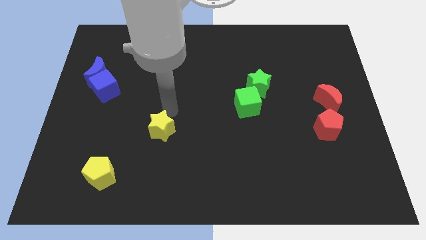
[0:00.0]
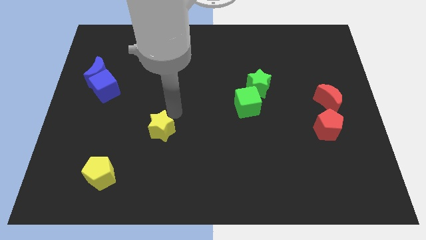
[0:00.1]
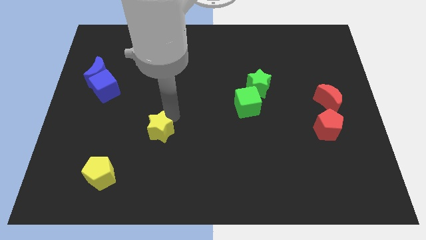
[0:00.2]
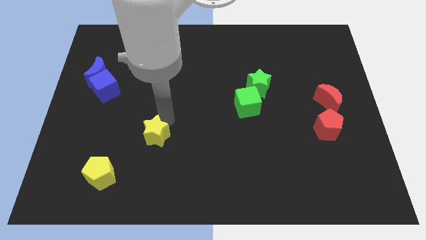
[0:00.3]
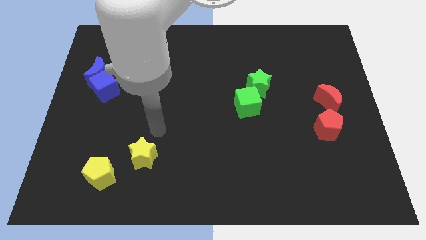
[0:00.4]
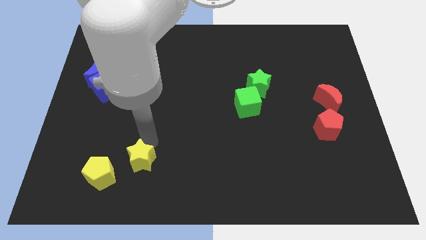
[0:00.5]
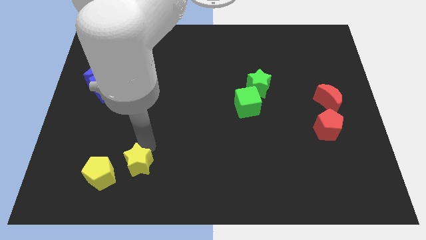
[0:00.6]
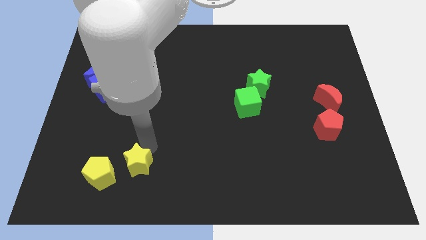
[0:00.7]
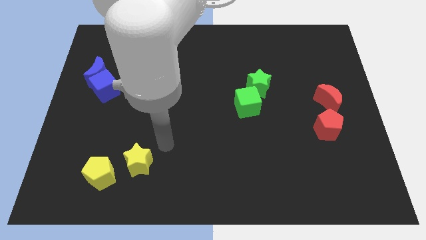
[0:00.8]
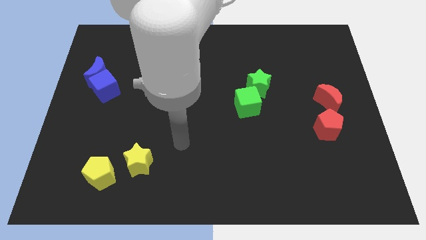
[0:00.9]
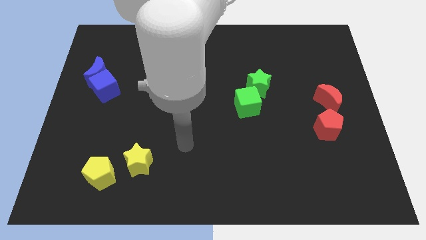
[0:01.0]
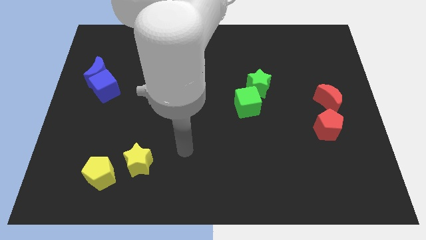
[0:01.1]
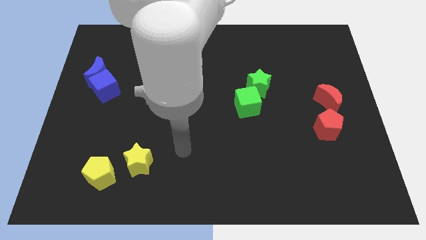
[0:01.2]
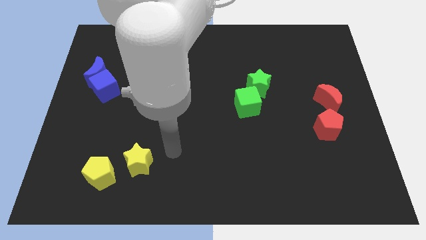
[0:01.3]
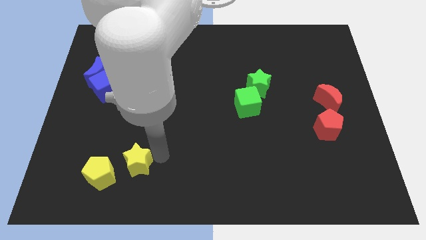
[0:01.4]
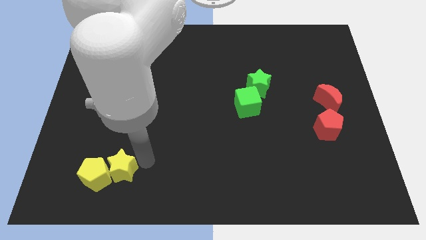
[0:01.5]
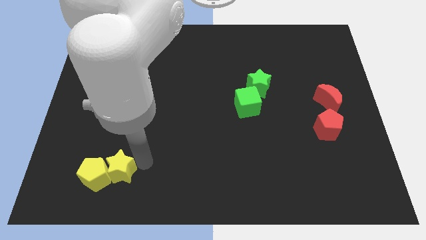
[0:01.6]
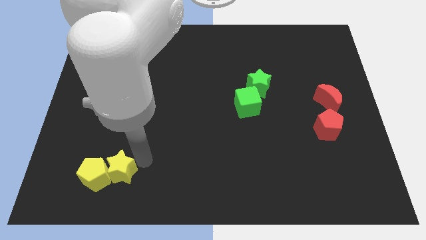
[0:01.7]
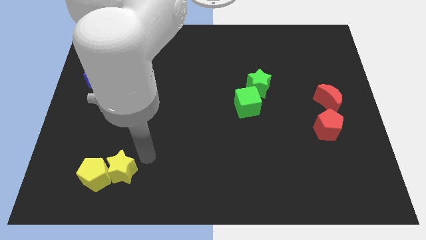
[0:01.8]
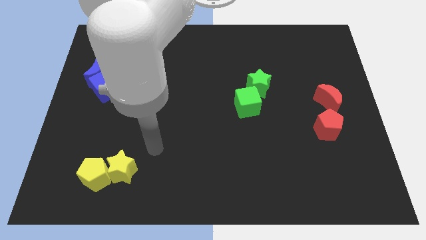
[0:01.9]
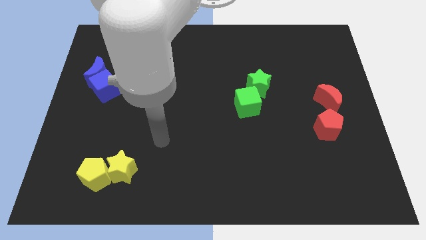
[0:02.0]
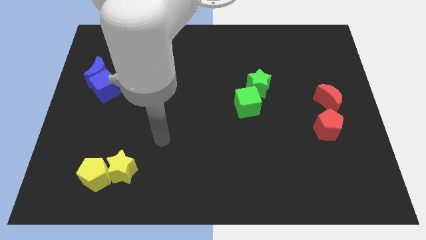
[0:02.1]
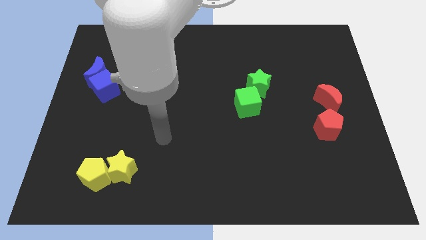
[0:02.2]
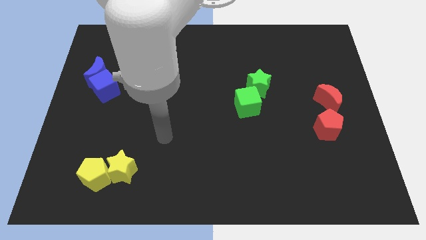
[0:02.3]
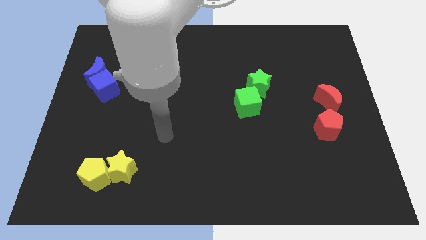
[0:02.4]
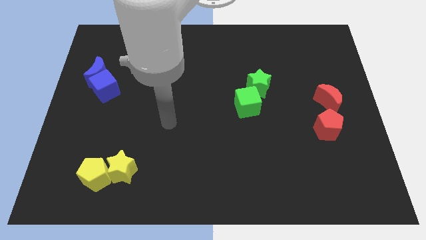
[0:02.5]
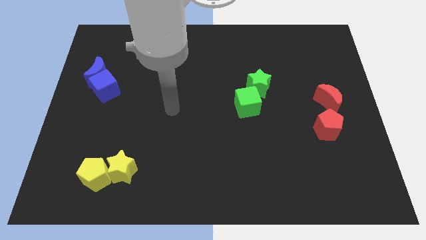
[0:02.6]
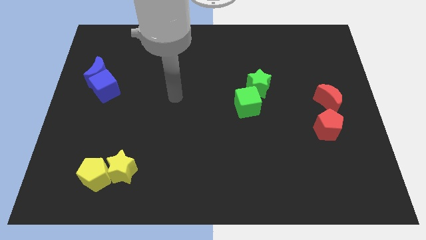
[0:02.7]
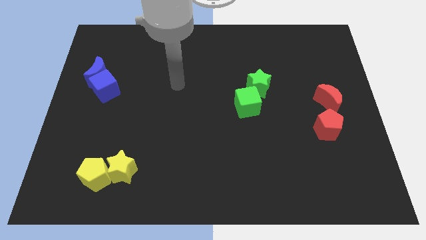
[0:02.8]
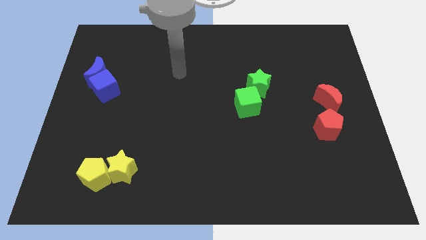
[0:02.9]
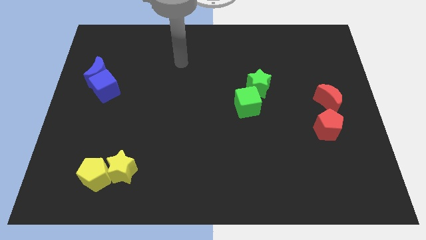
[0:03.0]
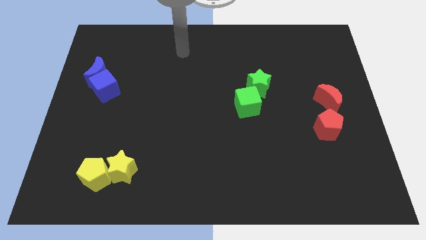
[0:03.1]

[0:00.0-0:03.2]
slide the yellow star into yellow polygon

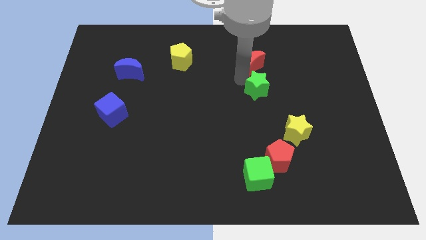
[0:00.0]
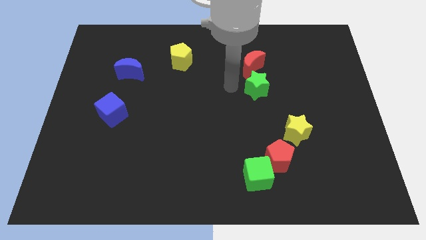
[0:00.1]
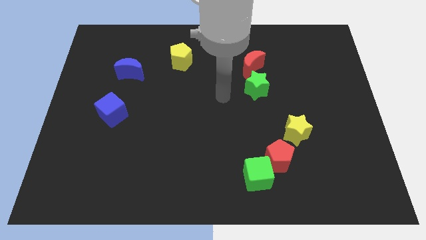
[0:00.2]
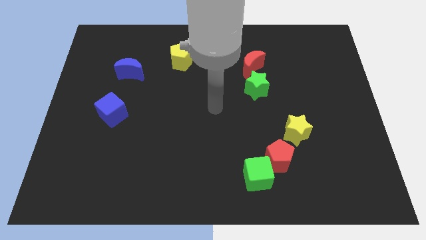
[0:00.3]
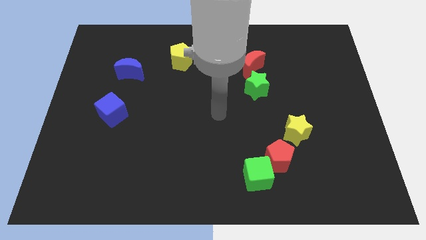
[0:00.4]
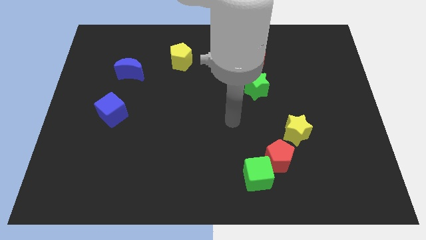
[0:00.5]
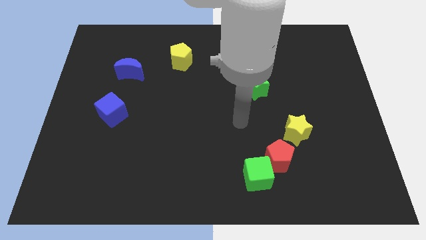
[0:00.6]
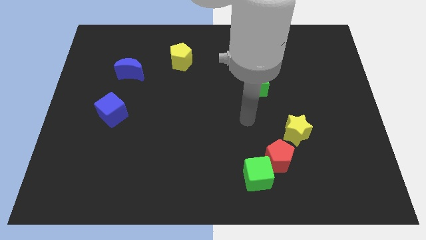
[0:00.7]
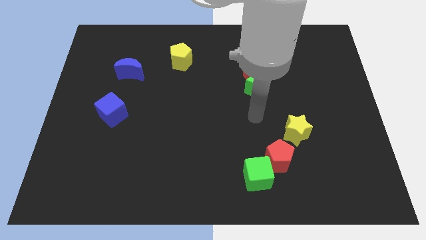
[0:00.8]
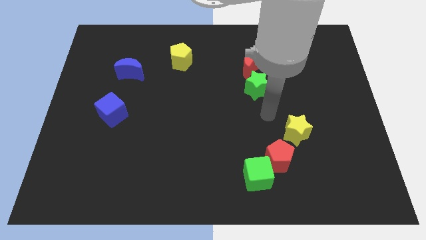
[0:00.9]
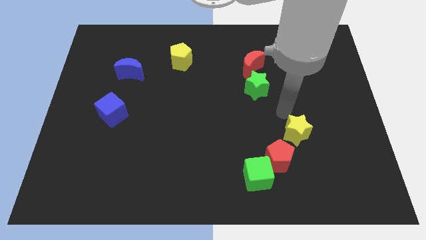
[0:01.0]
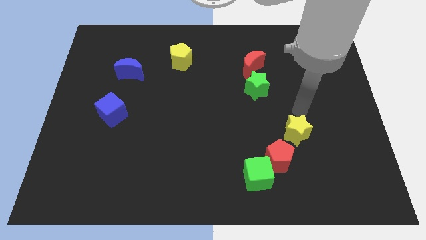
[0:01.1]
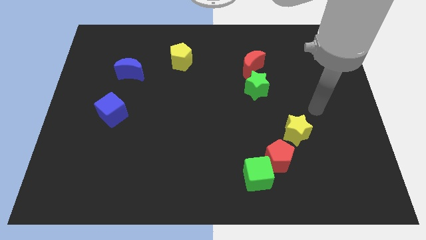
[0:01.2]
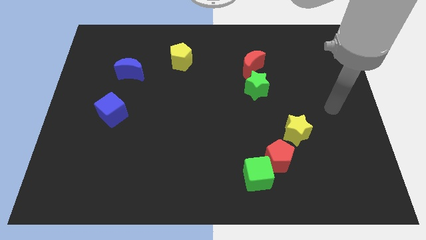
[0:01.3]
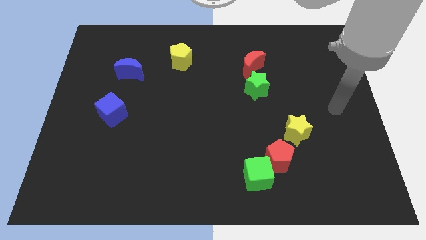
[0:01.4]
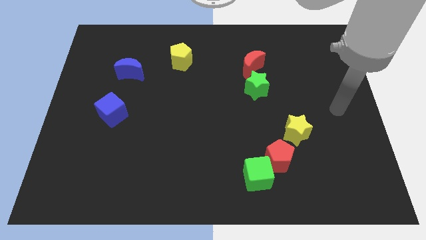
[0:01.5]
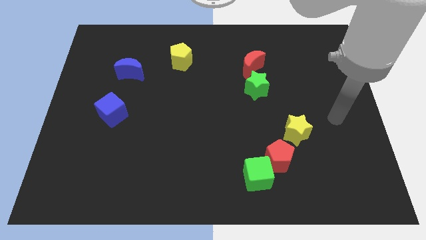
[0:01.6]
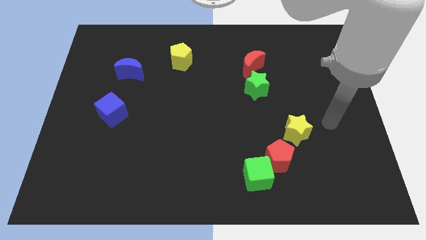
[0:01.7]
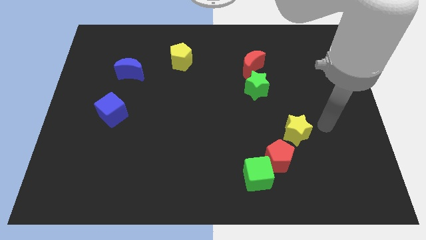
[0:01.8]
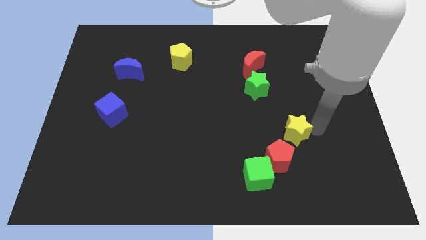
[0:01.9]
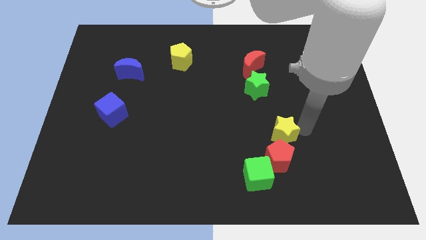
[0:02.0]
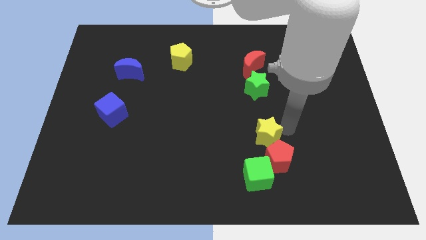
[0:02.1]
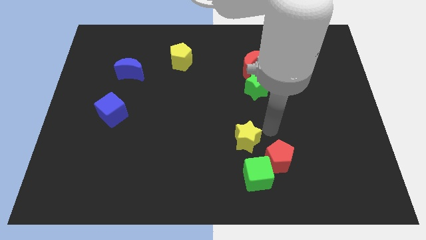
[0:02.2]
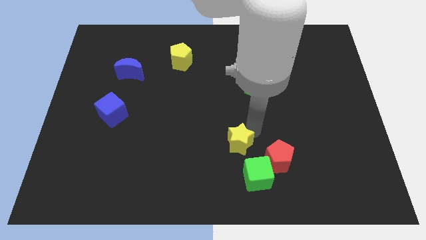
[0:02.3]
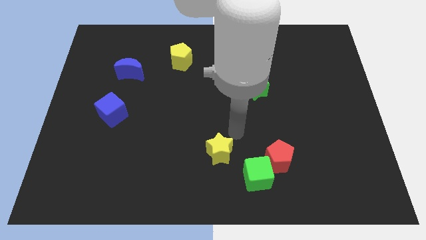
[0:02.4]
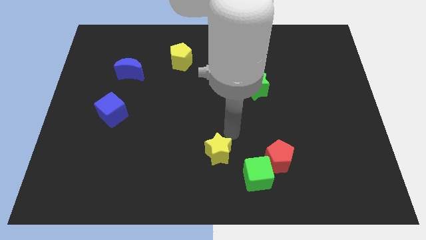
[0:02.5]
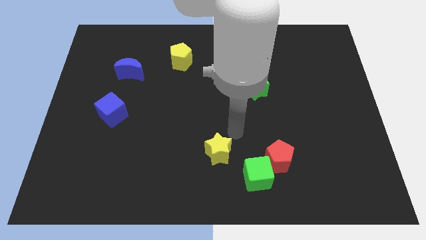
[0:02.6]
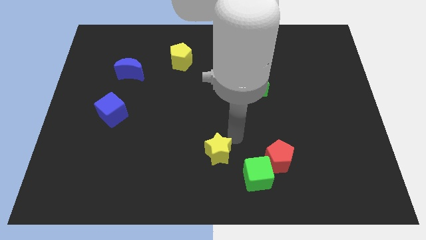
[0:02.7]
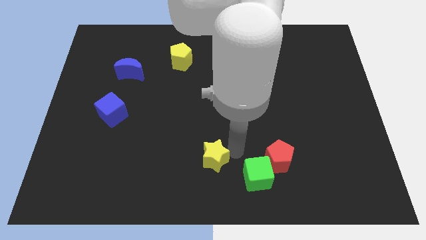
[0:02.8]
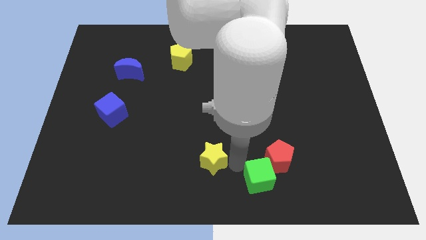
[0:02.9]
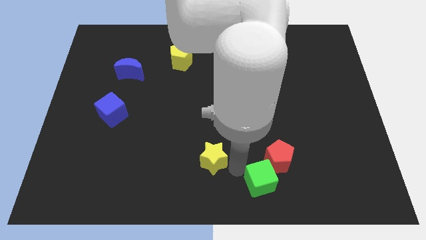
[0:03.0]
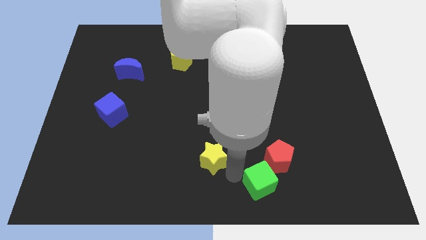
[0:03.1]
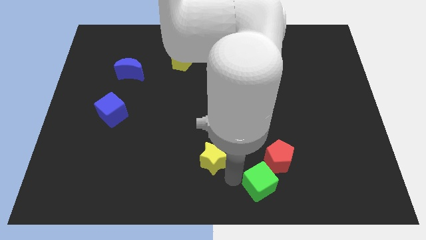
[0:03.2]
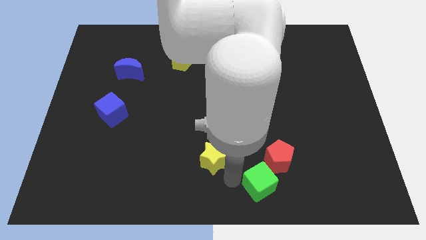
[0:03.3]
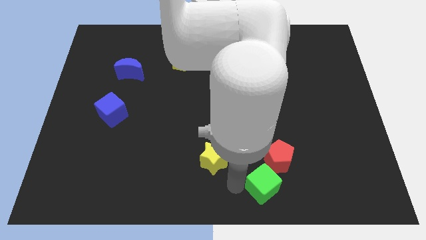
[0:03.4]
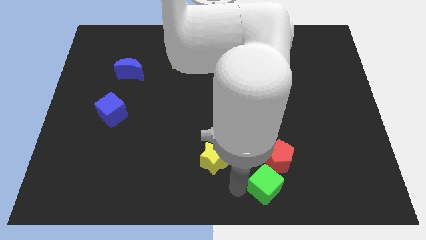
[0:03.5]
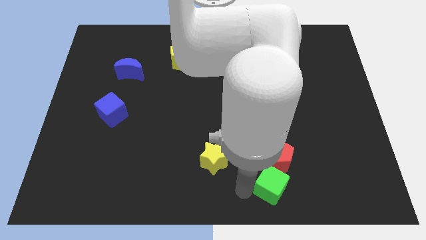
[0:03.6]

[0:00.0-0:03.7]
place the yellow star at the top of the green cube

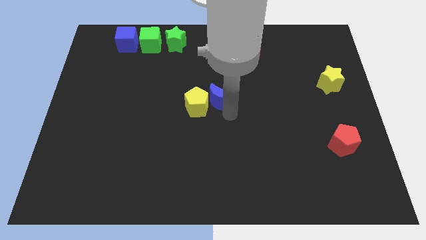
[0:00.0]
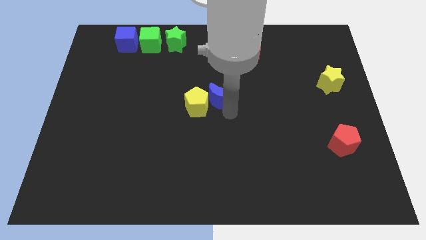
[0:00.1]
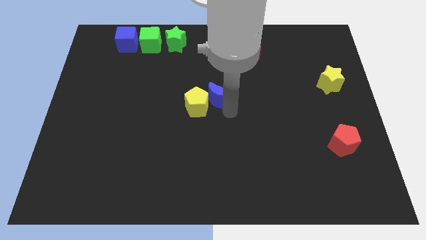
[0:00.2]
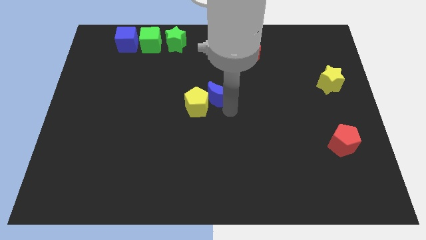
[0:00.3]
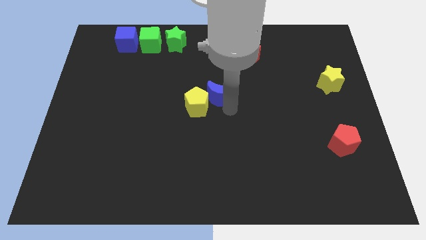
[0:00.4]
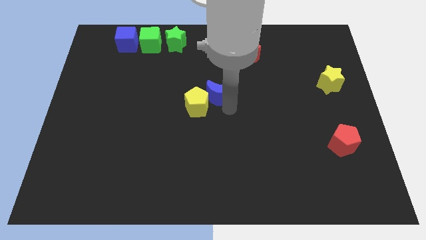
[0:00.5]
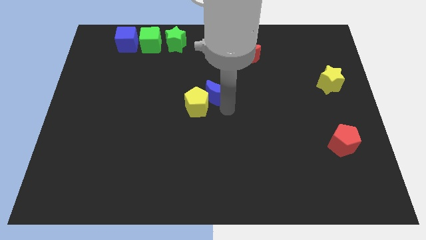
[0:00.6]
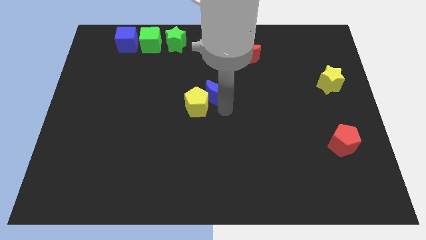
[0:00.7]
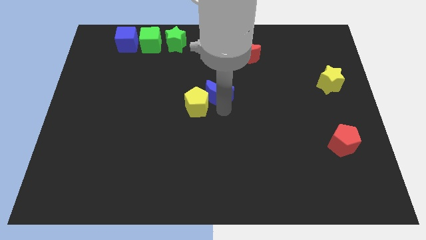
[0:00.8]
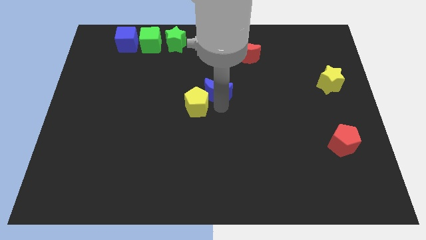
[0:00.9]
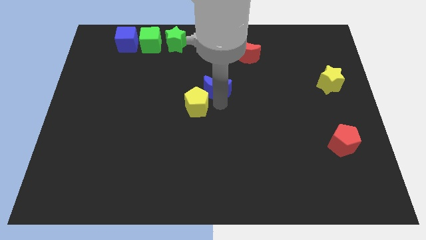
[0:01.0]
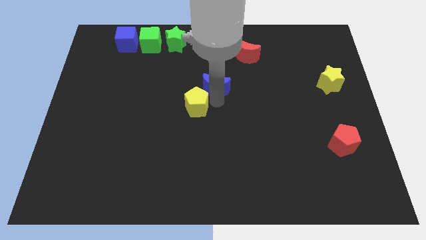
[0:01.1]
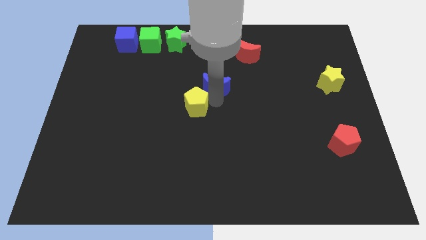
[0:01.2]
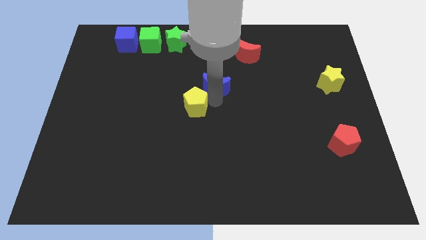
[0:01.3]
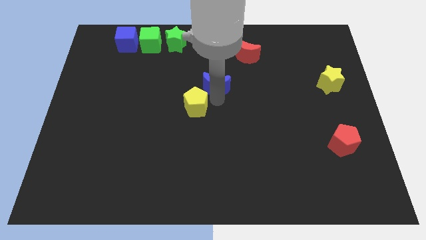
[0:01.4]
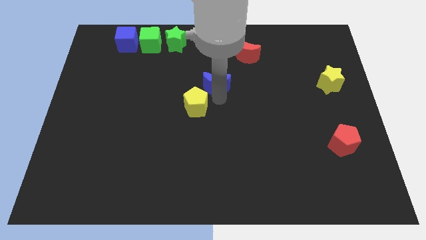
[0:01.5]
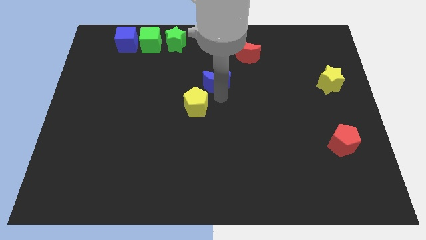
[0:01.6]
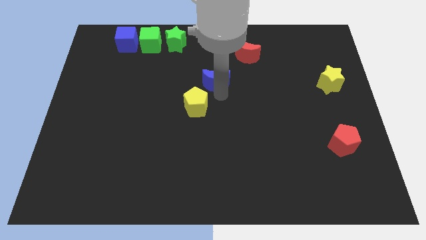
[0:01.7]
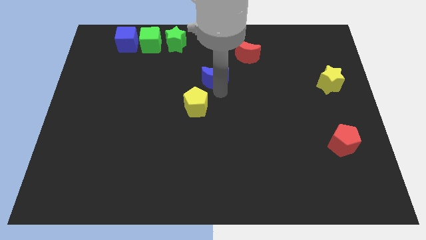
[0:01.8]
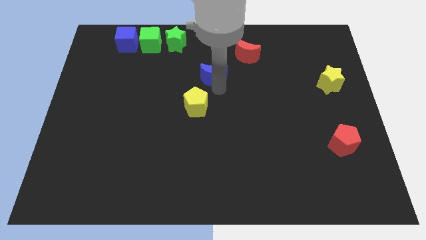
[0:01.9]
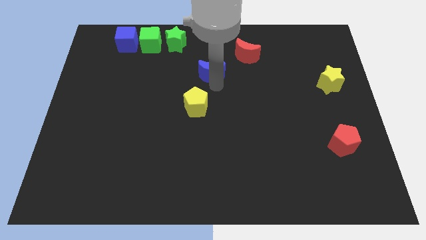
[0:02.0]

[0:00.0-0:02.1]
separate blue moon from yellow pentagon

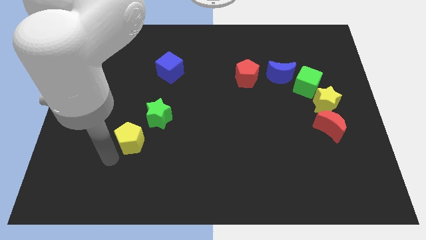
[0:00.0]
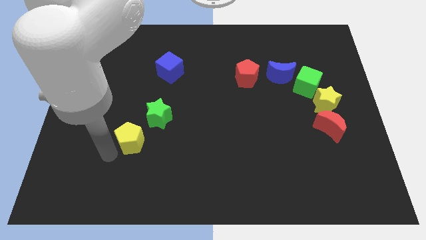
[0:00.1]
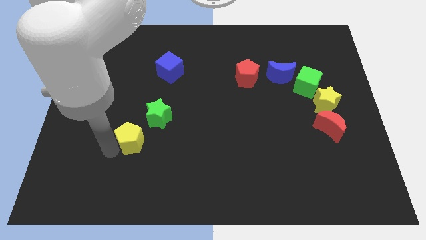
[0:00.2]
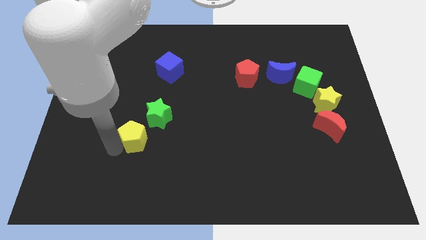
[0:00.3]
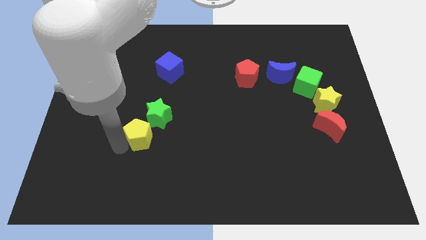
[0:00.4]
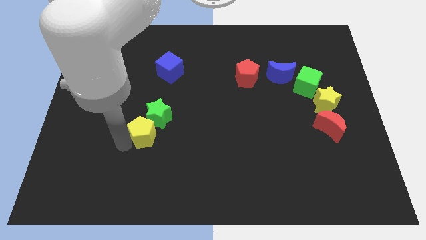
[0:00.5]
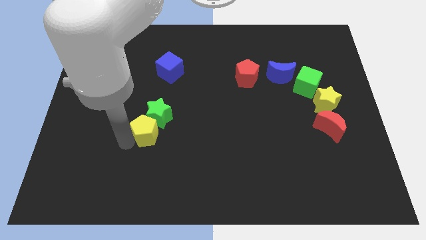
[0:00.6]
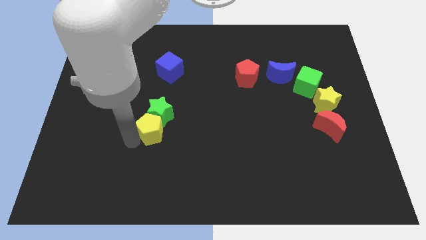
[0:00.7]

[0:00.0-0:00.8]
place the yellow pentagon below the green star
